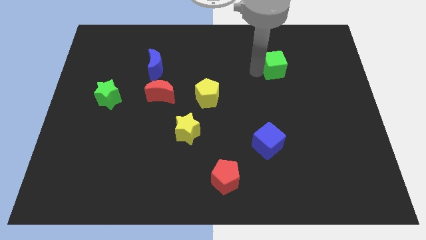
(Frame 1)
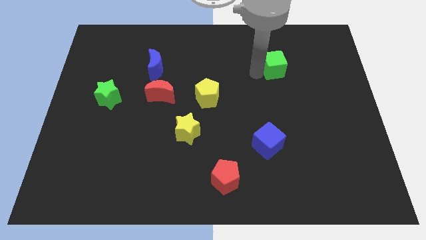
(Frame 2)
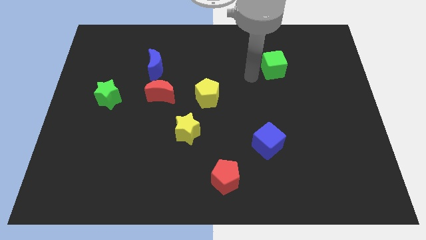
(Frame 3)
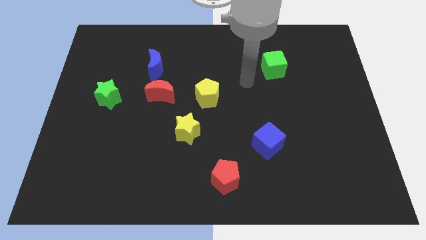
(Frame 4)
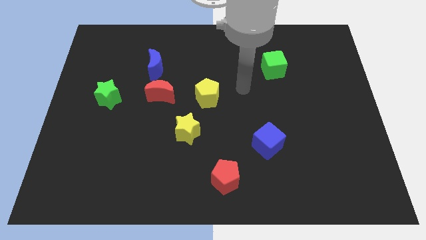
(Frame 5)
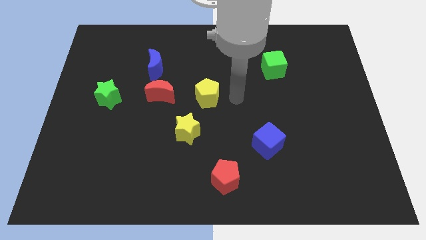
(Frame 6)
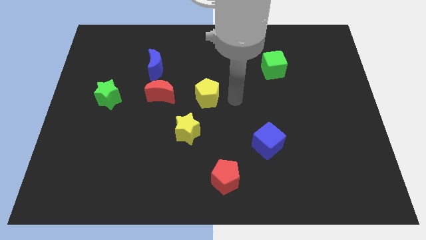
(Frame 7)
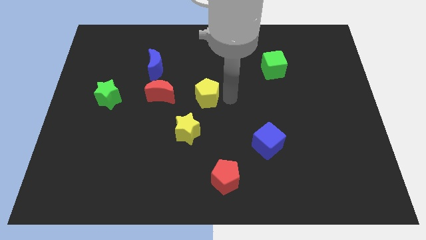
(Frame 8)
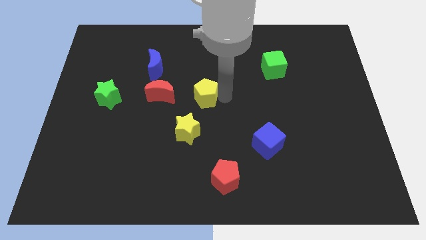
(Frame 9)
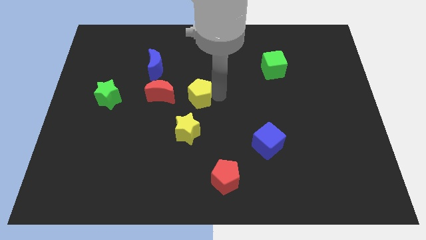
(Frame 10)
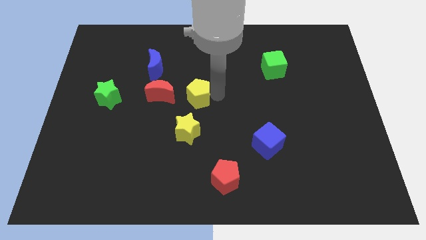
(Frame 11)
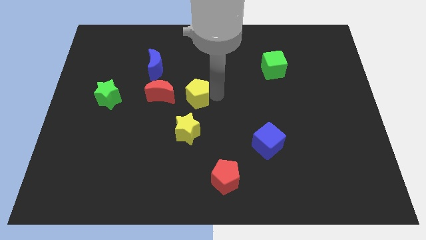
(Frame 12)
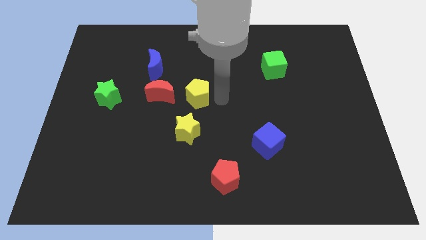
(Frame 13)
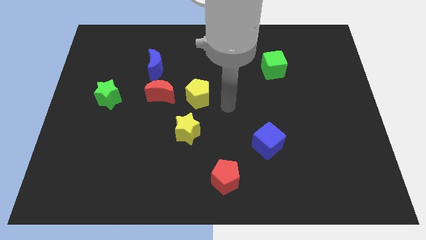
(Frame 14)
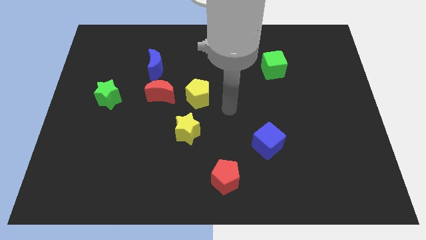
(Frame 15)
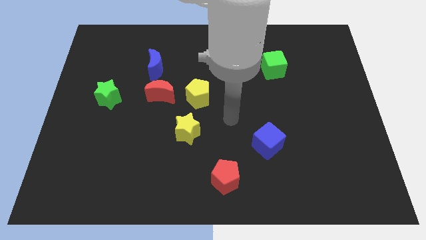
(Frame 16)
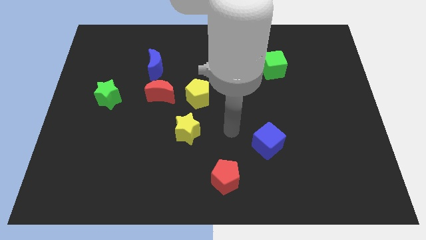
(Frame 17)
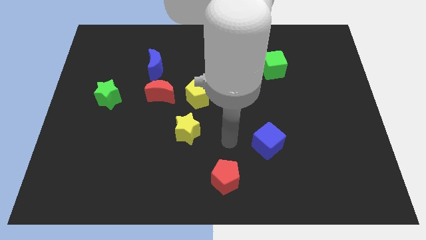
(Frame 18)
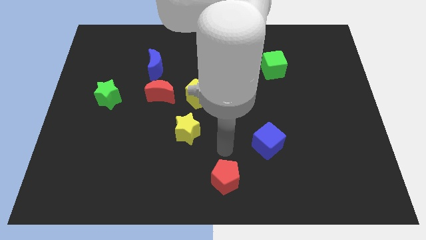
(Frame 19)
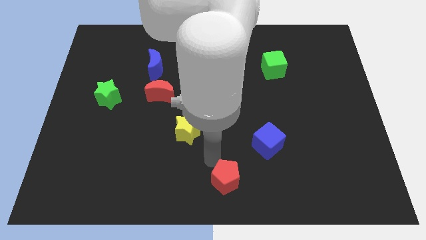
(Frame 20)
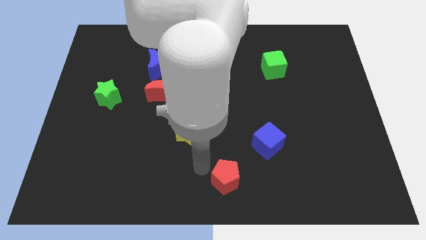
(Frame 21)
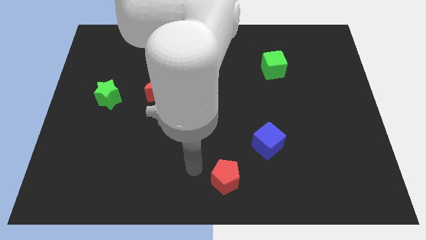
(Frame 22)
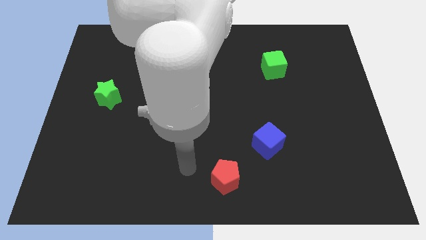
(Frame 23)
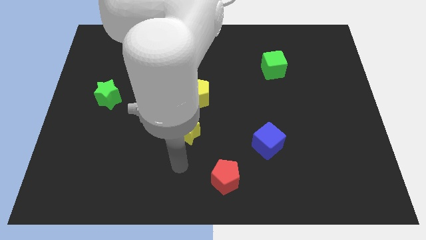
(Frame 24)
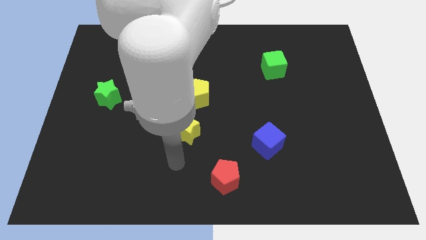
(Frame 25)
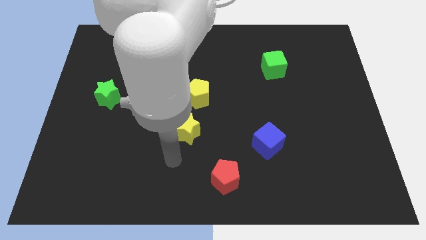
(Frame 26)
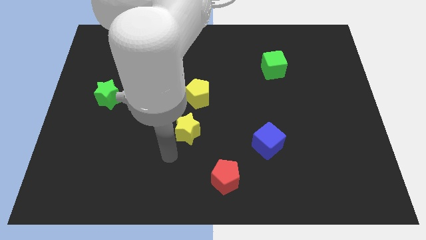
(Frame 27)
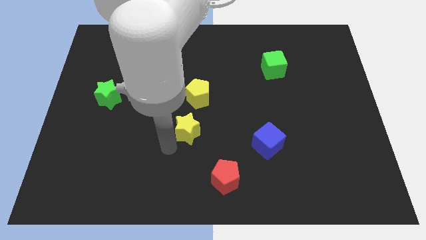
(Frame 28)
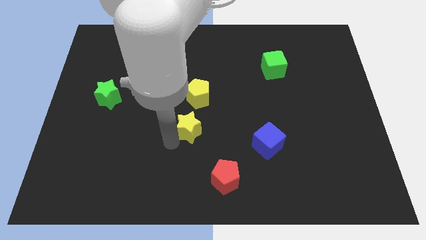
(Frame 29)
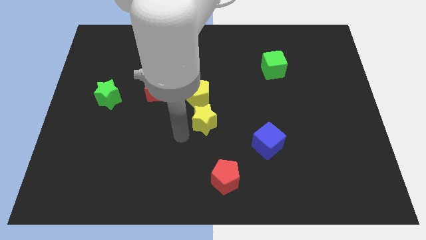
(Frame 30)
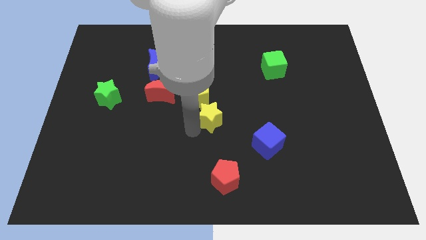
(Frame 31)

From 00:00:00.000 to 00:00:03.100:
slide the yellow pentagon slightly to the left

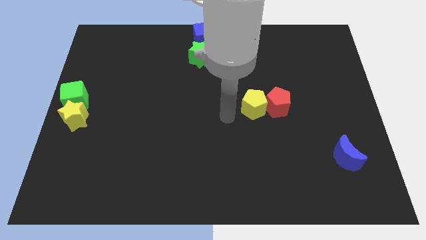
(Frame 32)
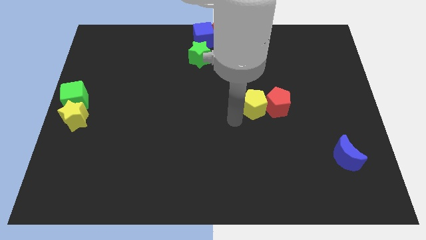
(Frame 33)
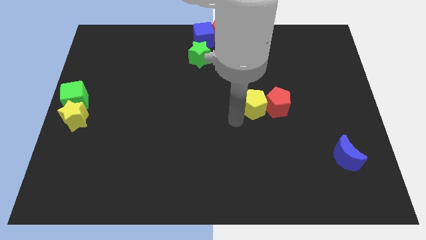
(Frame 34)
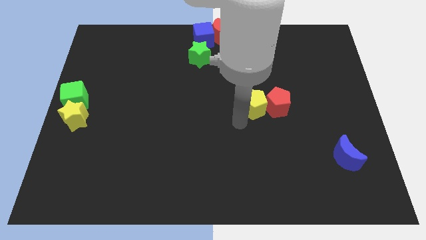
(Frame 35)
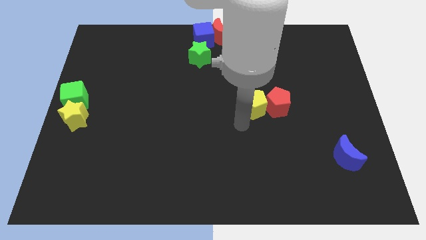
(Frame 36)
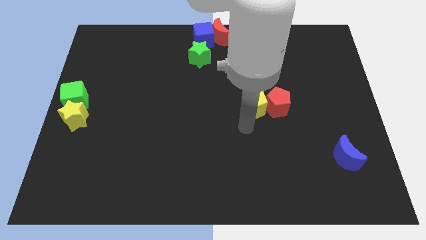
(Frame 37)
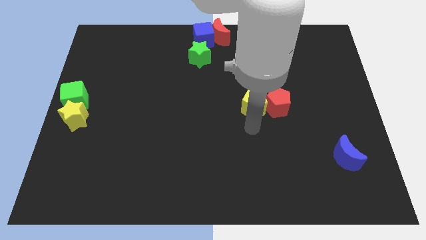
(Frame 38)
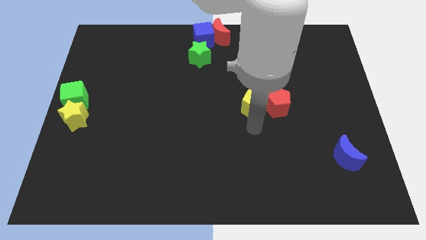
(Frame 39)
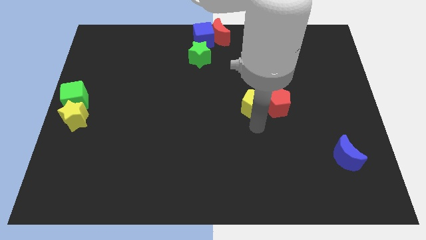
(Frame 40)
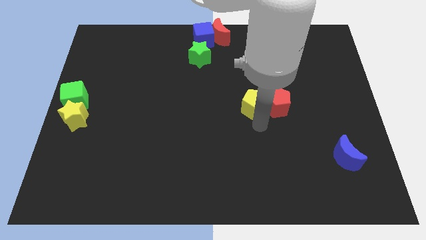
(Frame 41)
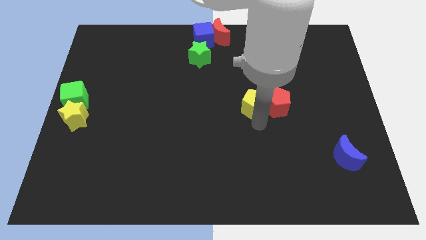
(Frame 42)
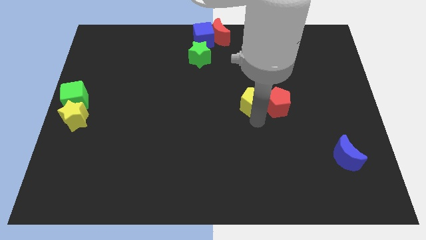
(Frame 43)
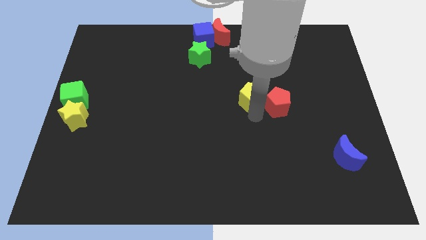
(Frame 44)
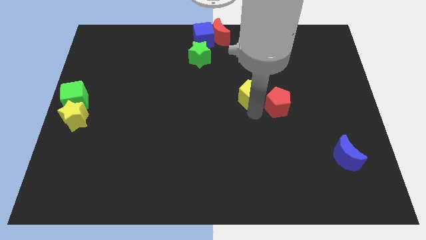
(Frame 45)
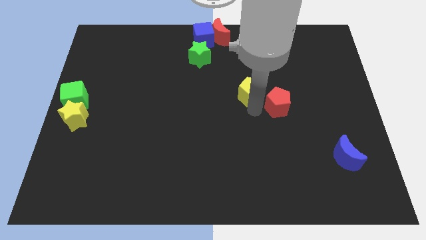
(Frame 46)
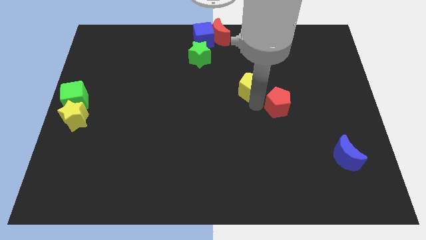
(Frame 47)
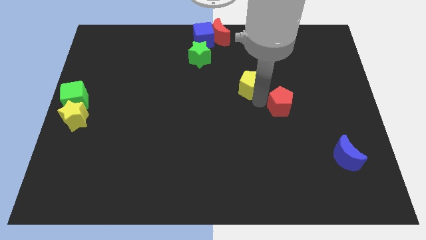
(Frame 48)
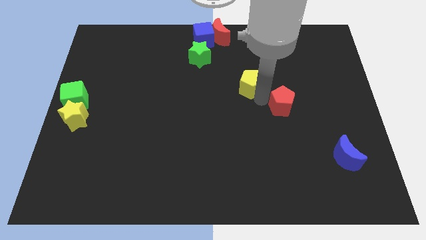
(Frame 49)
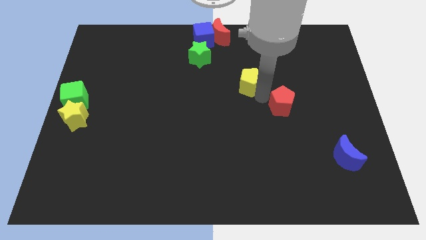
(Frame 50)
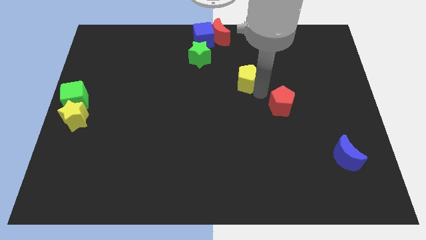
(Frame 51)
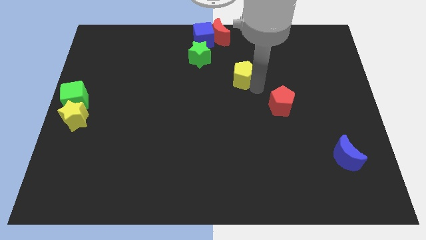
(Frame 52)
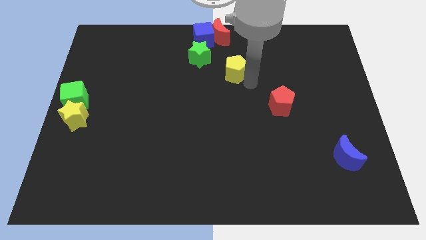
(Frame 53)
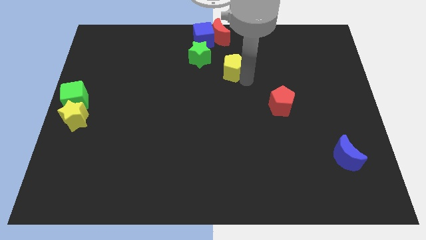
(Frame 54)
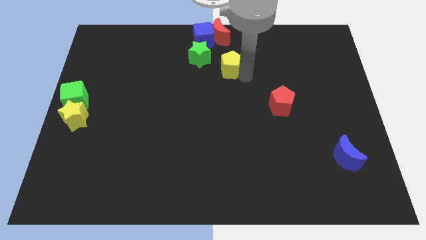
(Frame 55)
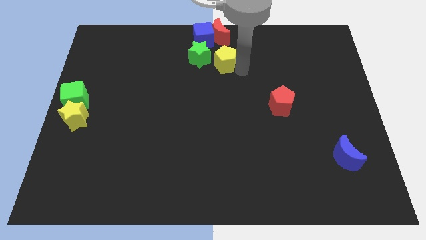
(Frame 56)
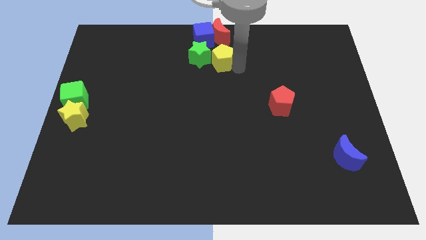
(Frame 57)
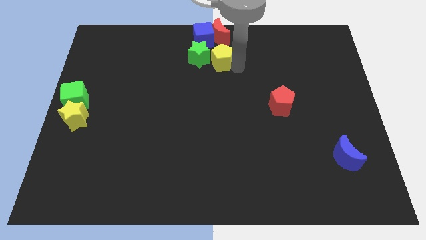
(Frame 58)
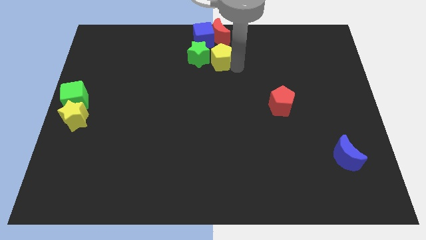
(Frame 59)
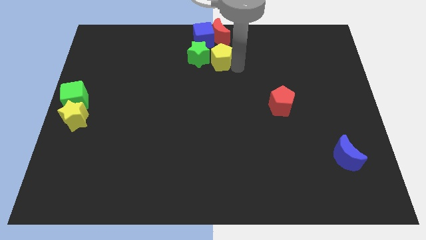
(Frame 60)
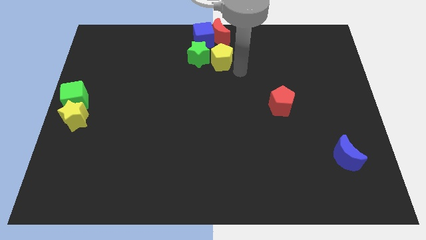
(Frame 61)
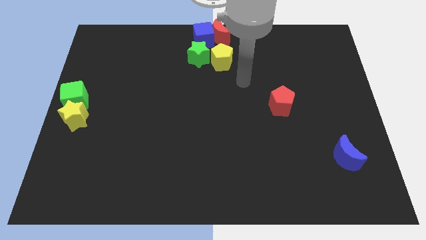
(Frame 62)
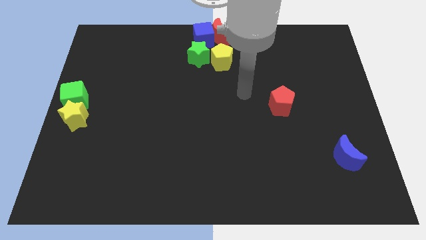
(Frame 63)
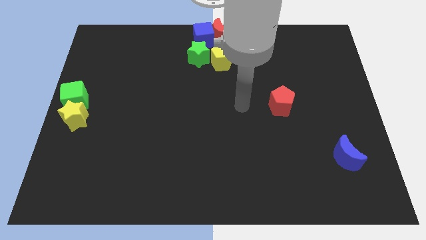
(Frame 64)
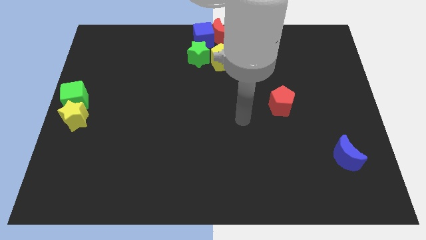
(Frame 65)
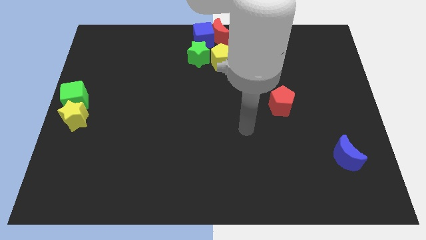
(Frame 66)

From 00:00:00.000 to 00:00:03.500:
move the yellow pentagon into the green star

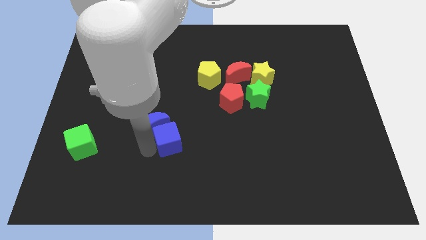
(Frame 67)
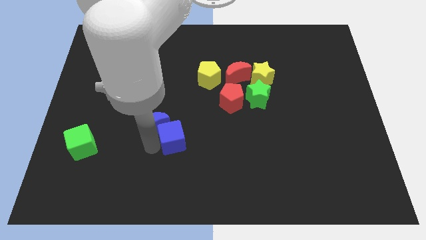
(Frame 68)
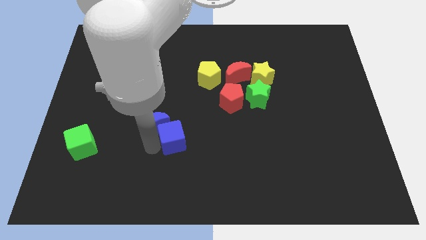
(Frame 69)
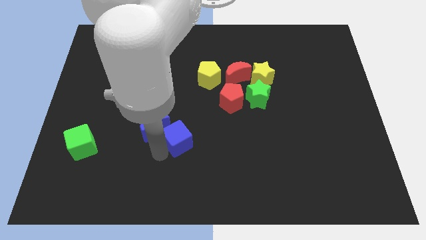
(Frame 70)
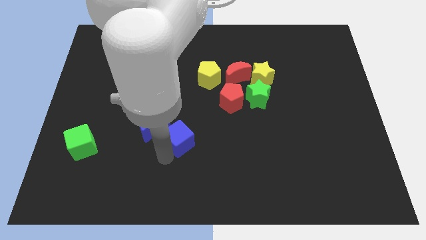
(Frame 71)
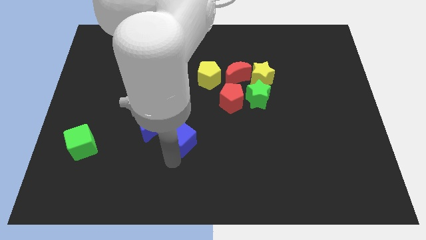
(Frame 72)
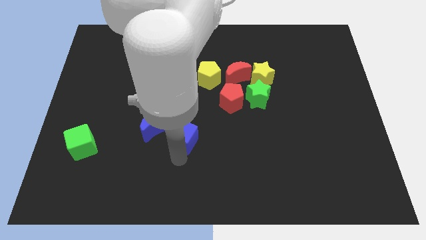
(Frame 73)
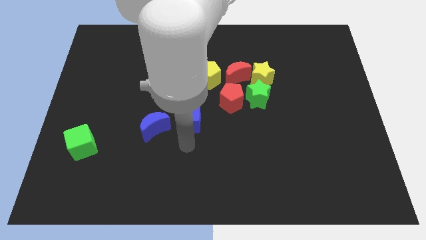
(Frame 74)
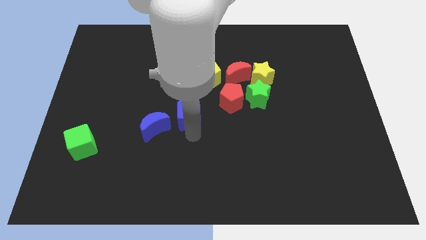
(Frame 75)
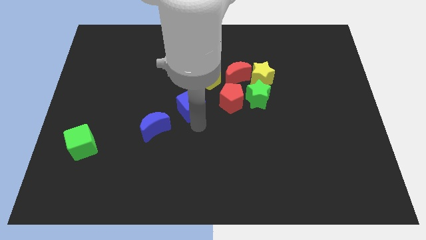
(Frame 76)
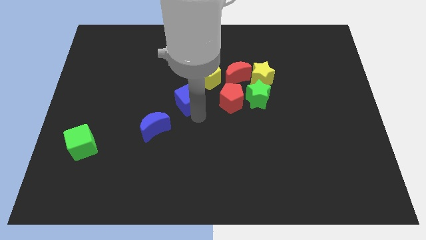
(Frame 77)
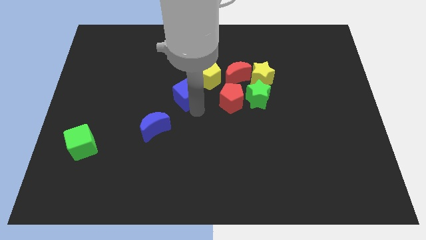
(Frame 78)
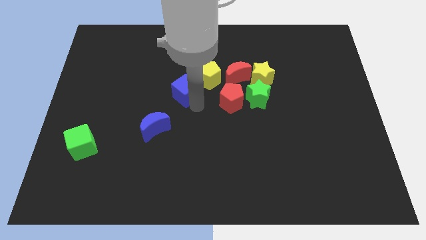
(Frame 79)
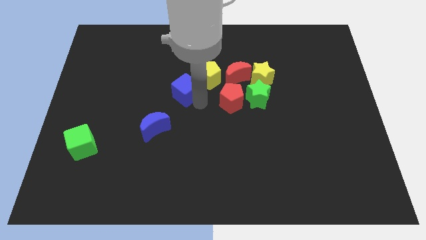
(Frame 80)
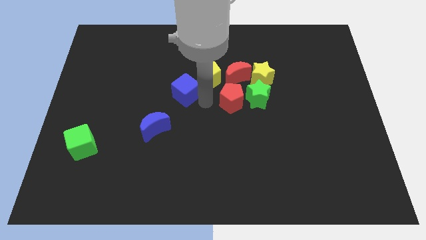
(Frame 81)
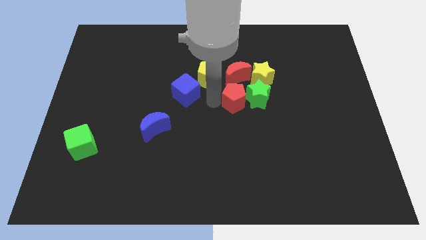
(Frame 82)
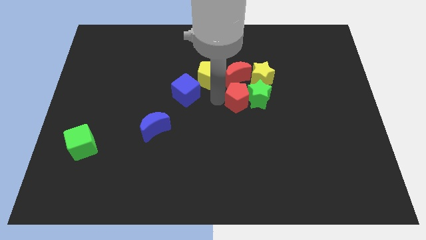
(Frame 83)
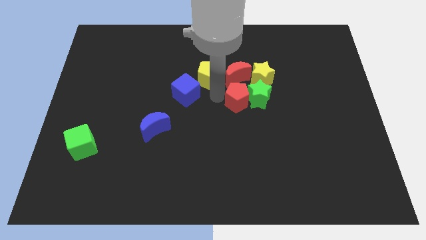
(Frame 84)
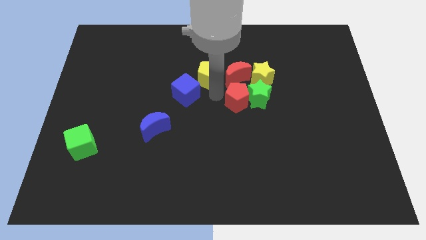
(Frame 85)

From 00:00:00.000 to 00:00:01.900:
separate the blue cube from the blue moon

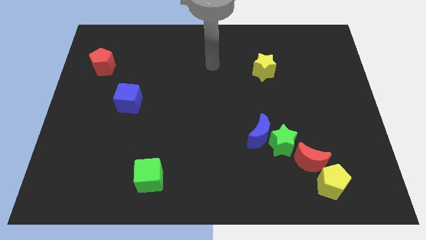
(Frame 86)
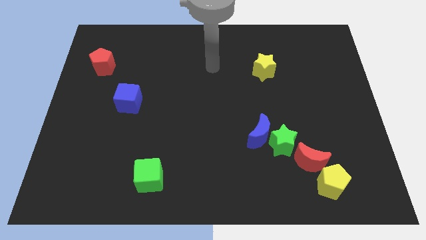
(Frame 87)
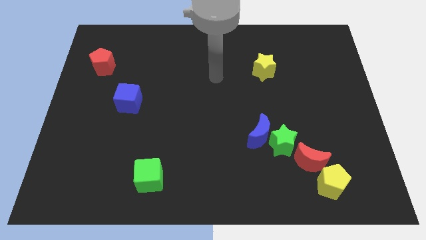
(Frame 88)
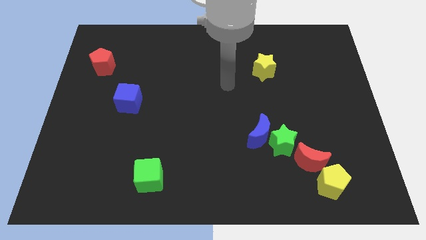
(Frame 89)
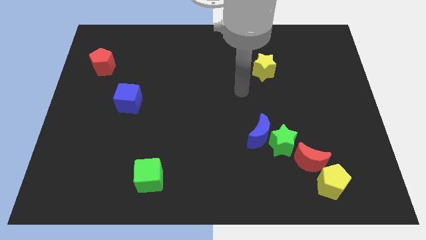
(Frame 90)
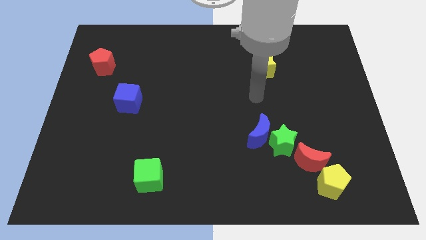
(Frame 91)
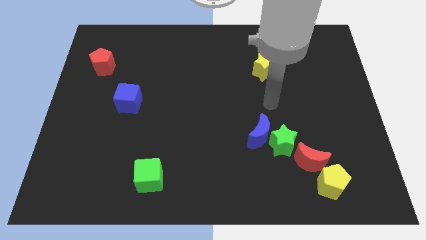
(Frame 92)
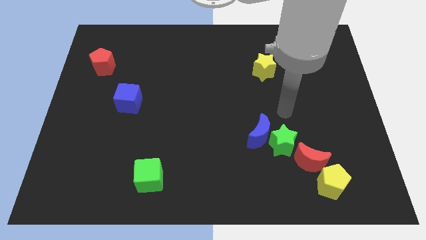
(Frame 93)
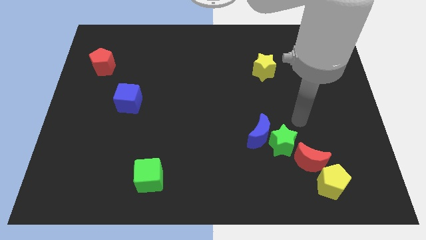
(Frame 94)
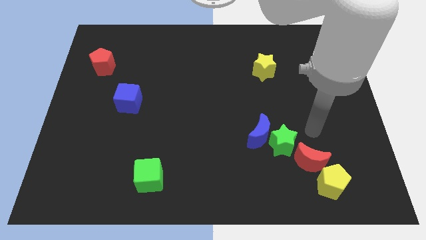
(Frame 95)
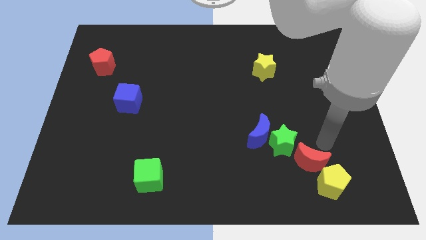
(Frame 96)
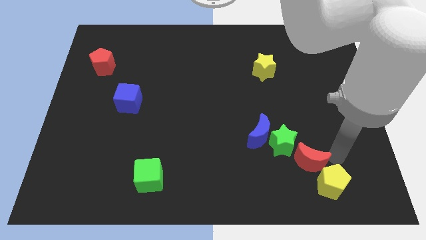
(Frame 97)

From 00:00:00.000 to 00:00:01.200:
point the arm to the right of the red moon
